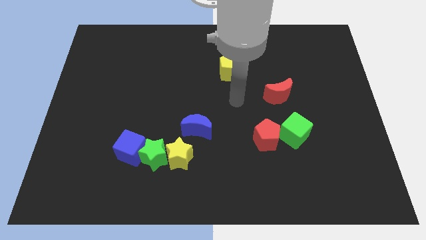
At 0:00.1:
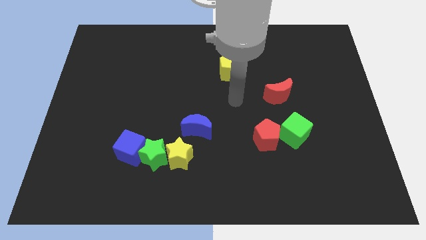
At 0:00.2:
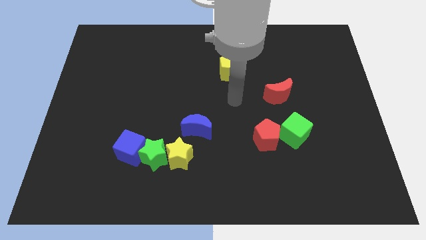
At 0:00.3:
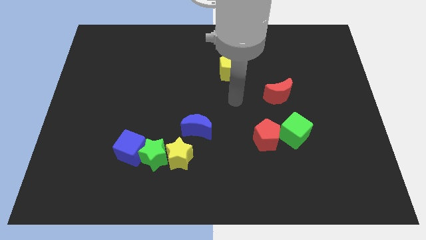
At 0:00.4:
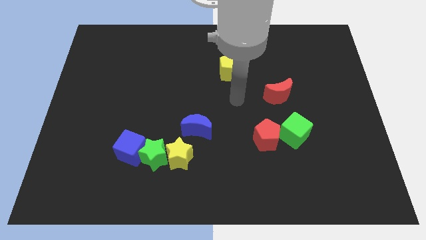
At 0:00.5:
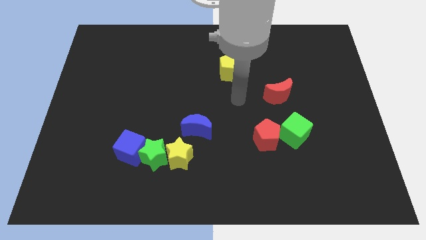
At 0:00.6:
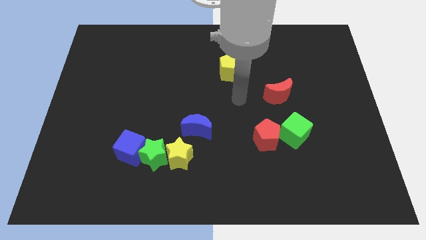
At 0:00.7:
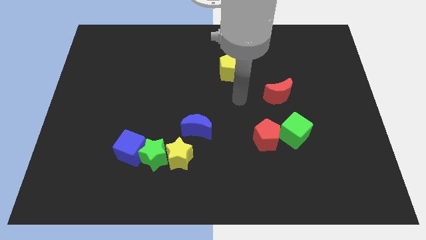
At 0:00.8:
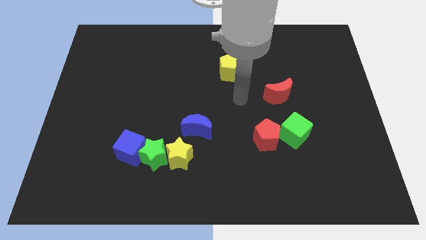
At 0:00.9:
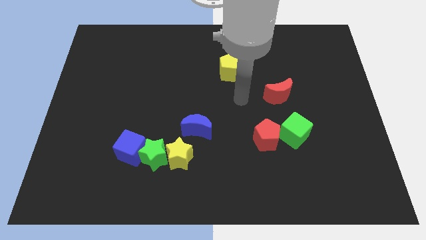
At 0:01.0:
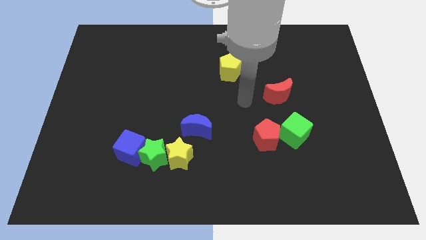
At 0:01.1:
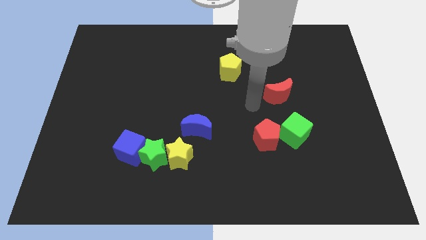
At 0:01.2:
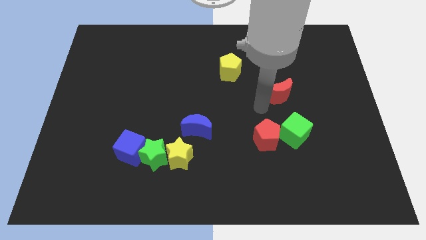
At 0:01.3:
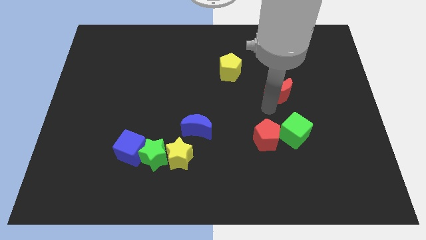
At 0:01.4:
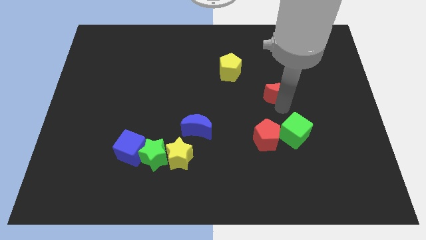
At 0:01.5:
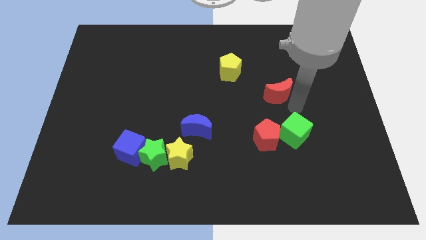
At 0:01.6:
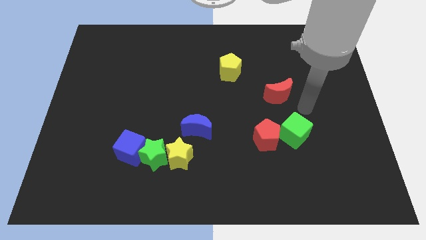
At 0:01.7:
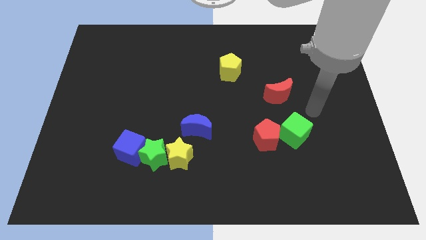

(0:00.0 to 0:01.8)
place your arm to the top right of the green cube

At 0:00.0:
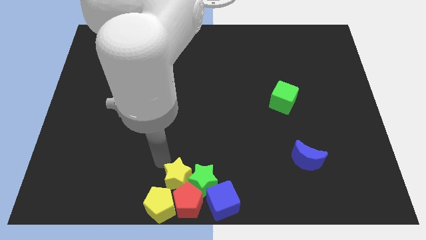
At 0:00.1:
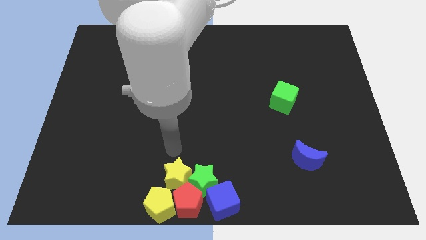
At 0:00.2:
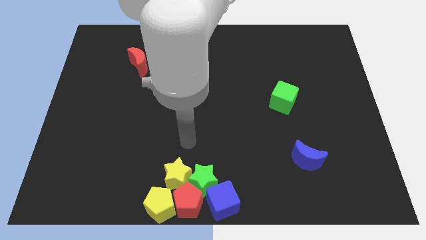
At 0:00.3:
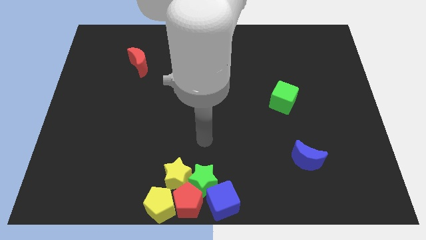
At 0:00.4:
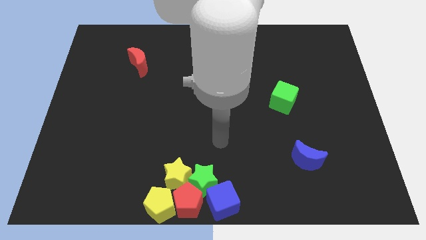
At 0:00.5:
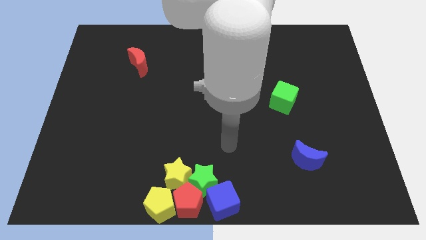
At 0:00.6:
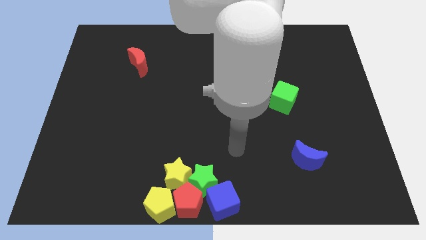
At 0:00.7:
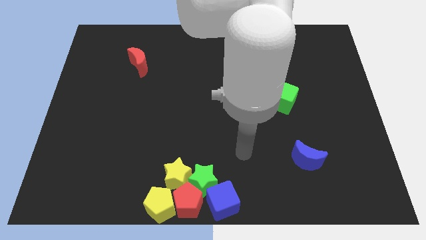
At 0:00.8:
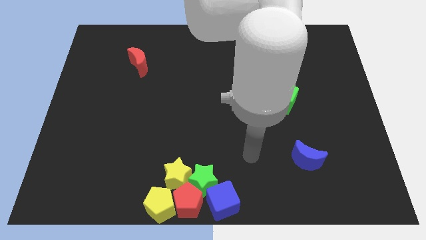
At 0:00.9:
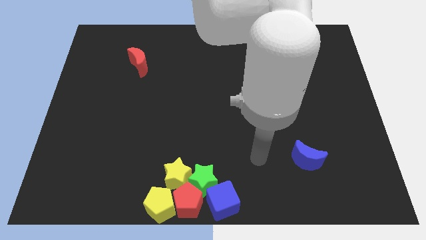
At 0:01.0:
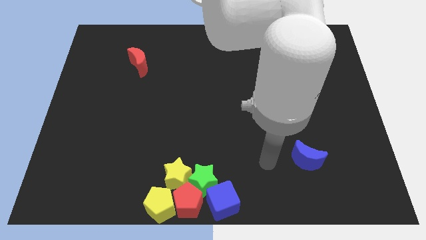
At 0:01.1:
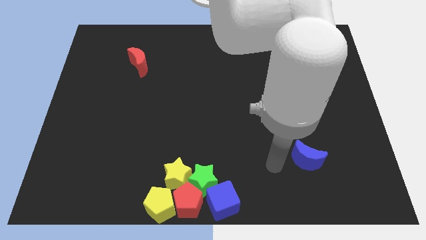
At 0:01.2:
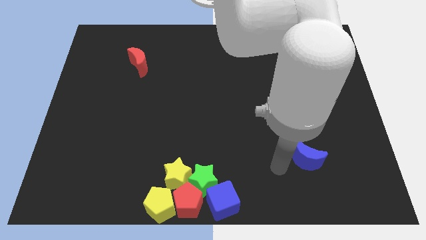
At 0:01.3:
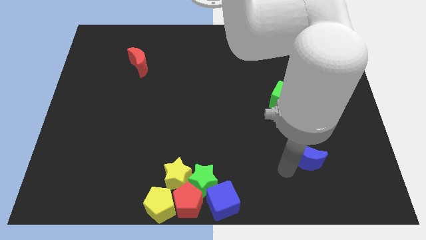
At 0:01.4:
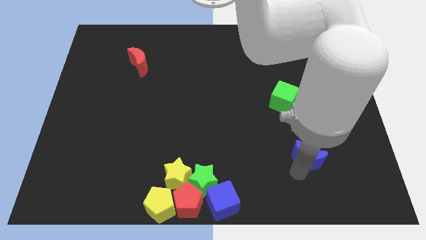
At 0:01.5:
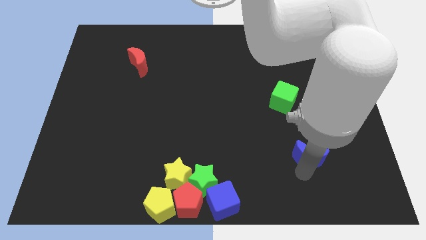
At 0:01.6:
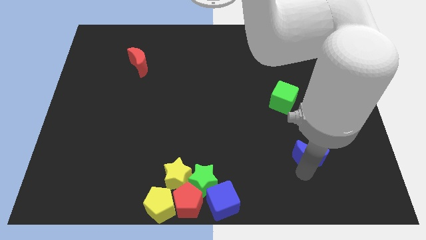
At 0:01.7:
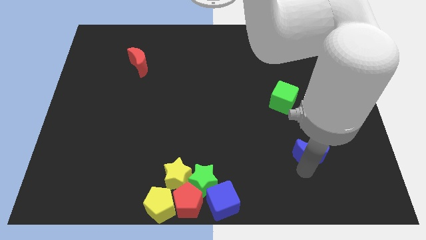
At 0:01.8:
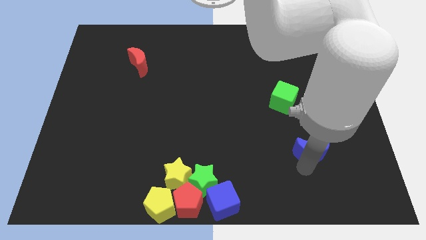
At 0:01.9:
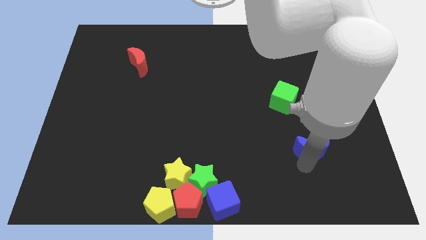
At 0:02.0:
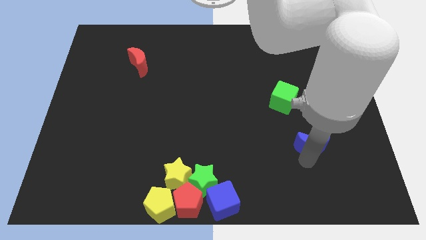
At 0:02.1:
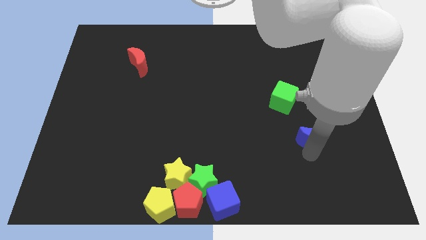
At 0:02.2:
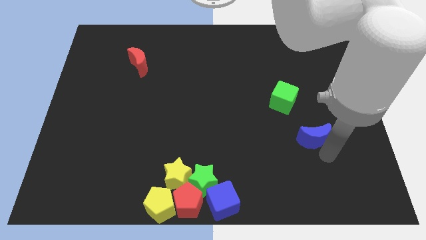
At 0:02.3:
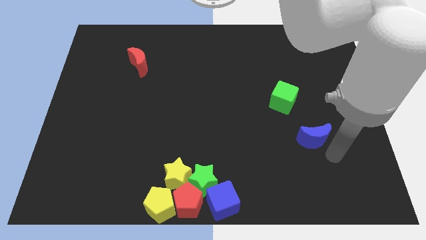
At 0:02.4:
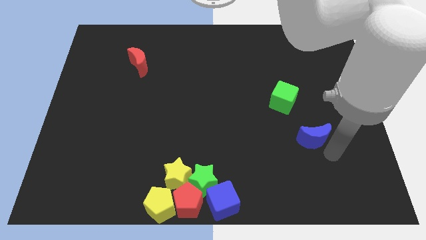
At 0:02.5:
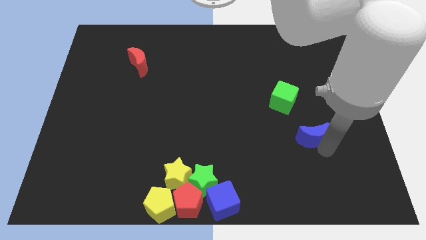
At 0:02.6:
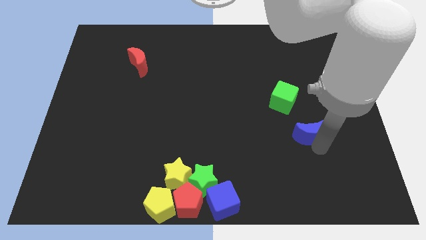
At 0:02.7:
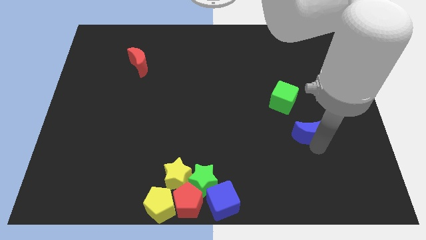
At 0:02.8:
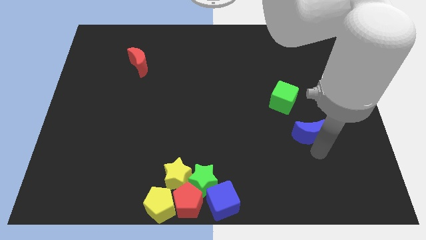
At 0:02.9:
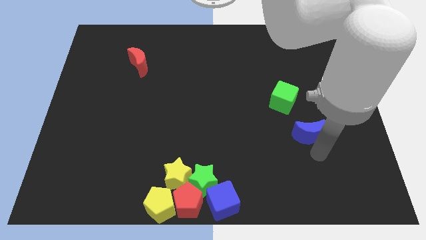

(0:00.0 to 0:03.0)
move the blue crescent towards green cube

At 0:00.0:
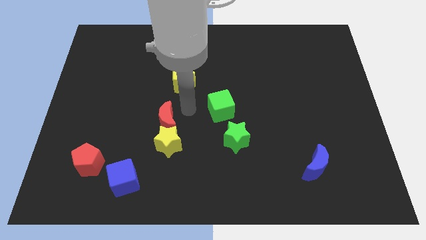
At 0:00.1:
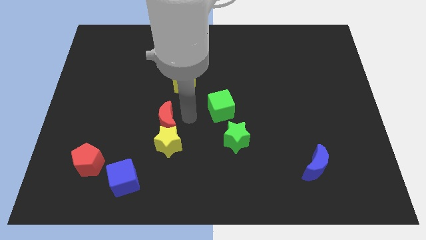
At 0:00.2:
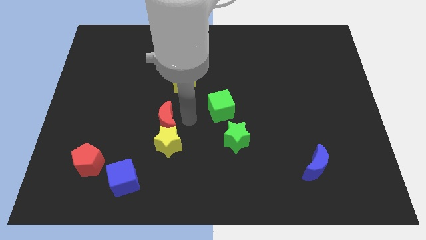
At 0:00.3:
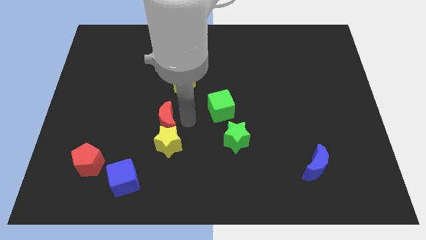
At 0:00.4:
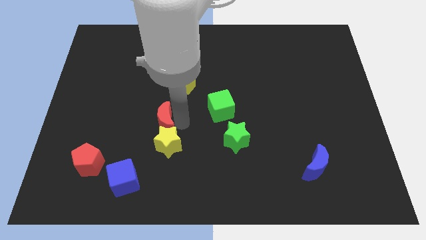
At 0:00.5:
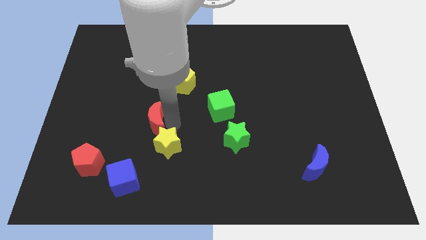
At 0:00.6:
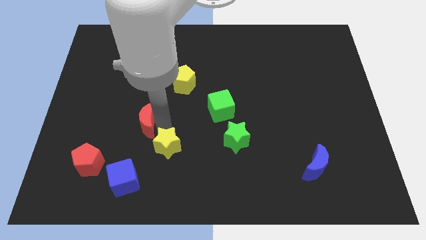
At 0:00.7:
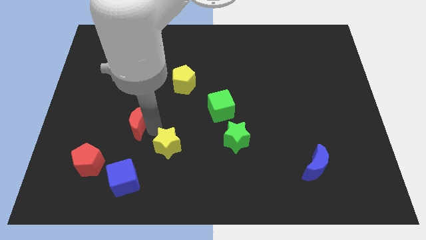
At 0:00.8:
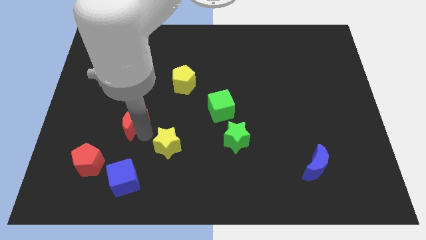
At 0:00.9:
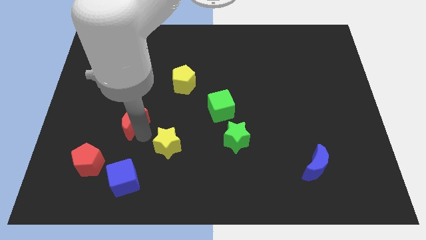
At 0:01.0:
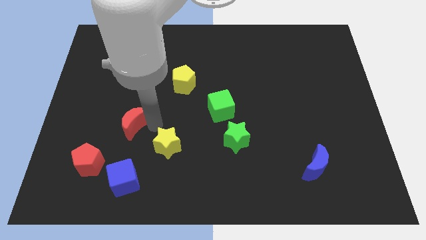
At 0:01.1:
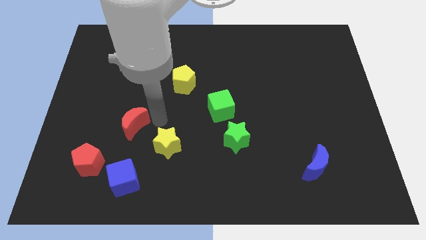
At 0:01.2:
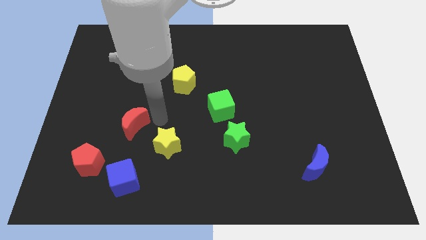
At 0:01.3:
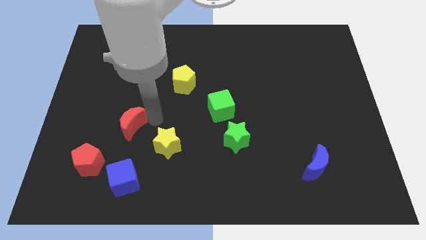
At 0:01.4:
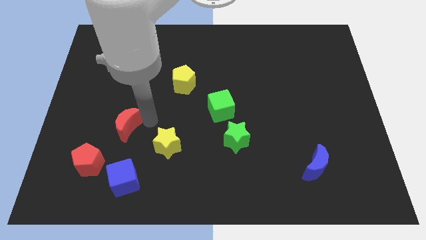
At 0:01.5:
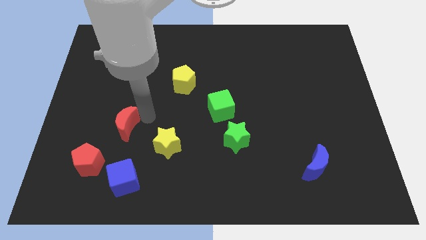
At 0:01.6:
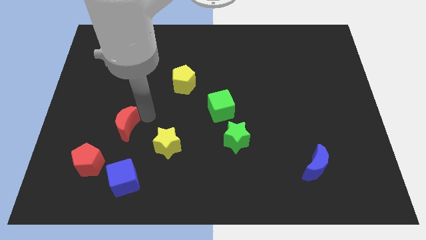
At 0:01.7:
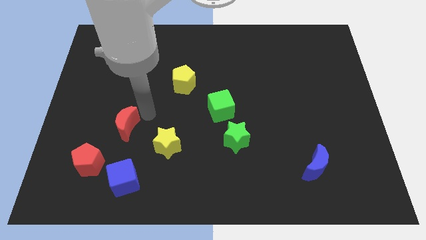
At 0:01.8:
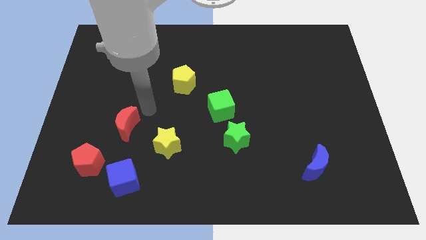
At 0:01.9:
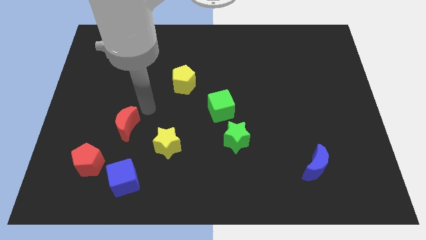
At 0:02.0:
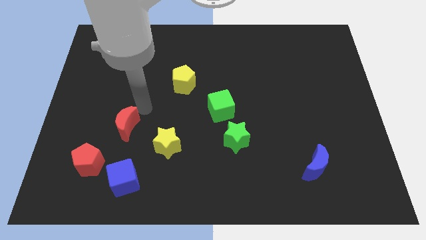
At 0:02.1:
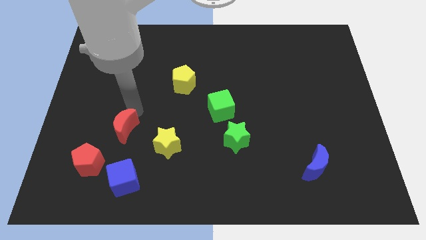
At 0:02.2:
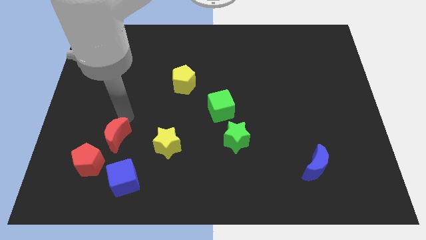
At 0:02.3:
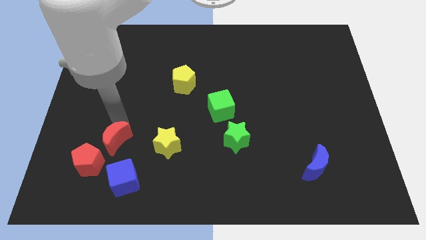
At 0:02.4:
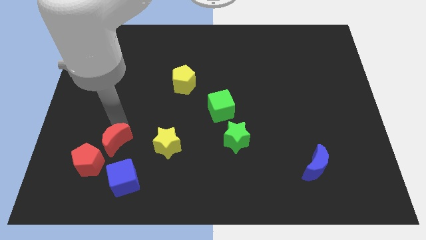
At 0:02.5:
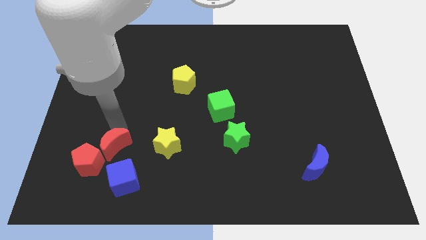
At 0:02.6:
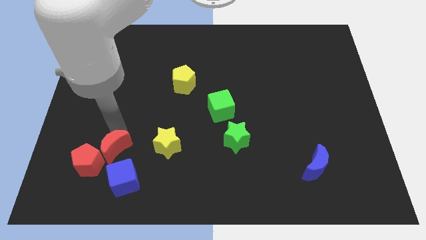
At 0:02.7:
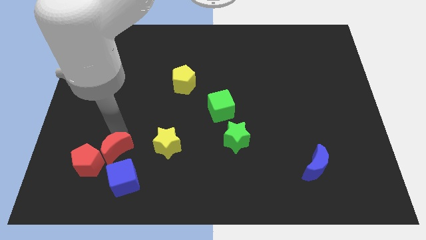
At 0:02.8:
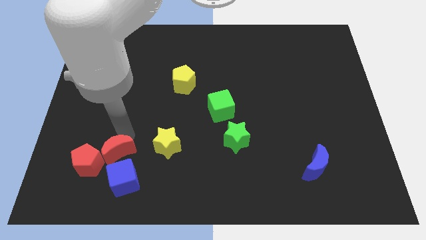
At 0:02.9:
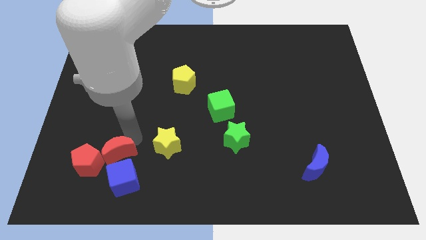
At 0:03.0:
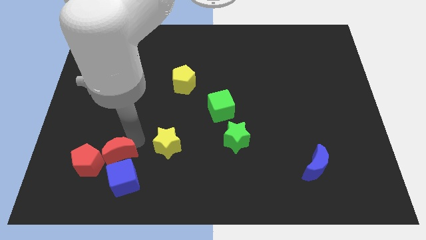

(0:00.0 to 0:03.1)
push the red crescent to the top of the blue cube

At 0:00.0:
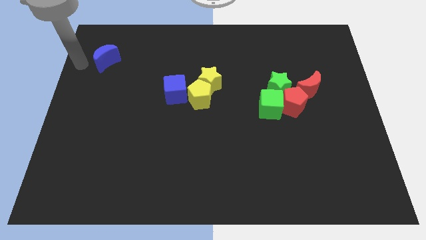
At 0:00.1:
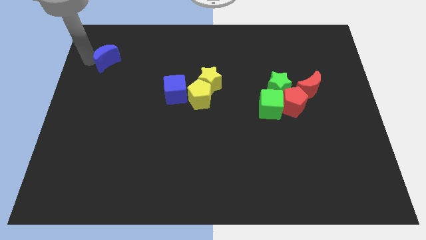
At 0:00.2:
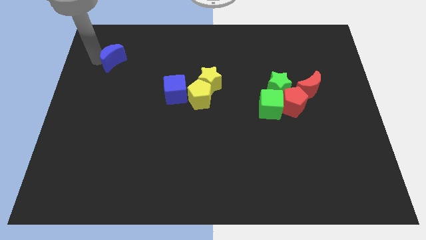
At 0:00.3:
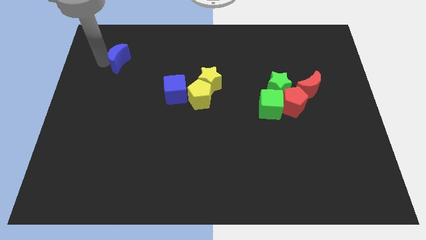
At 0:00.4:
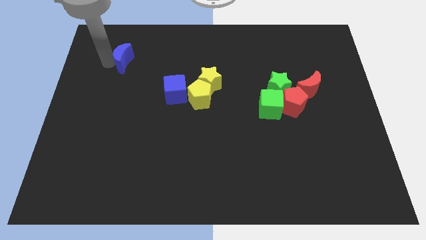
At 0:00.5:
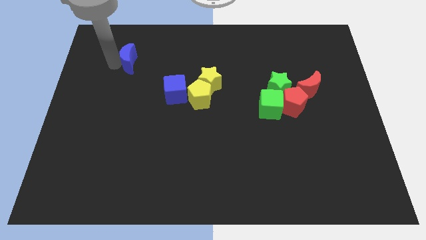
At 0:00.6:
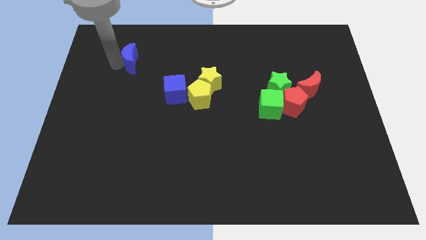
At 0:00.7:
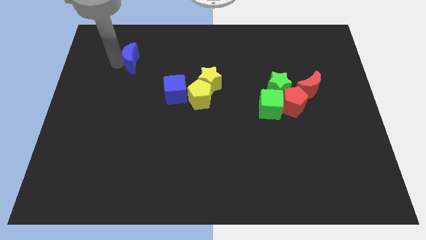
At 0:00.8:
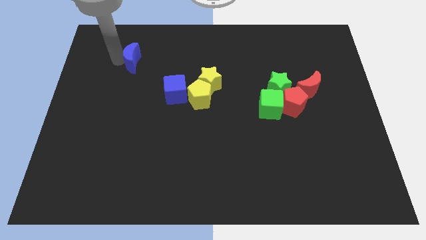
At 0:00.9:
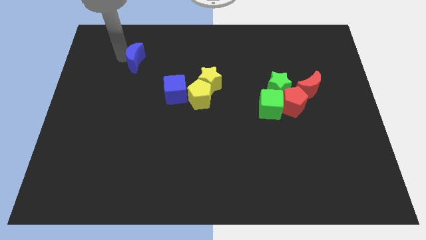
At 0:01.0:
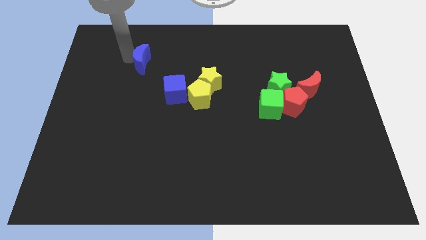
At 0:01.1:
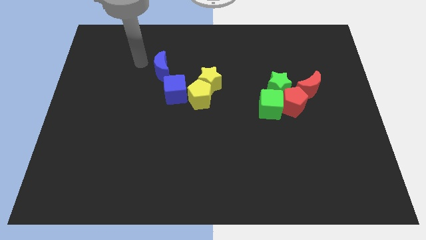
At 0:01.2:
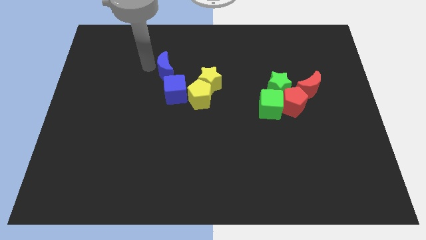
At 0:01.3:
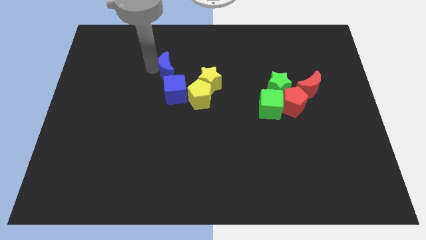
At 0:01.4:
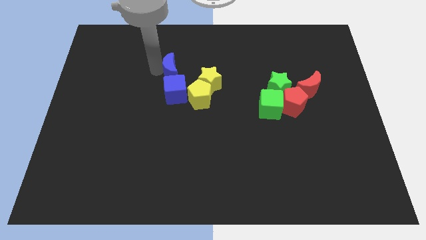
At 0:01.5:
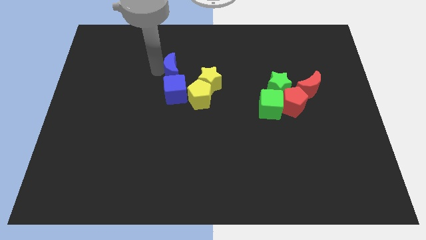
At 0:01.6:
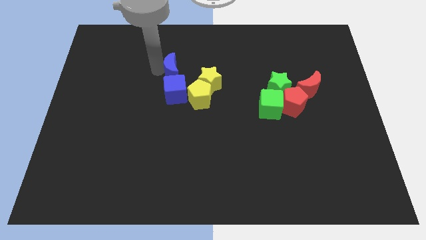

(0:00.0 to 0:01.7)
move blue crescent above the blue cube
